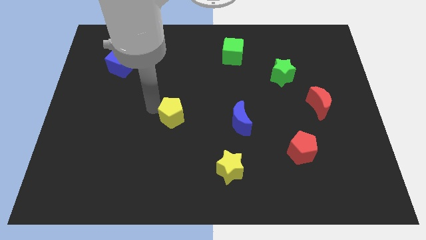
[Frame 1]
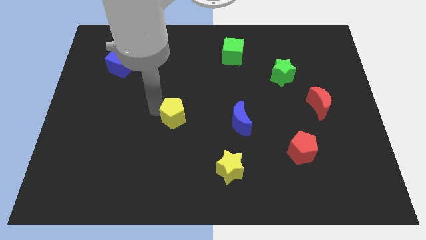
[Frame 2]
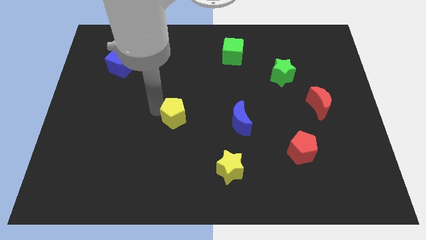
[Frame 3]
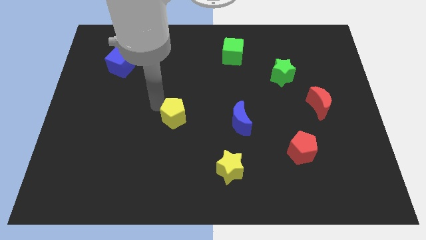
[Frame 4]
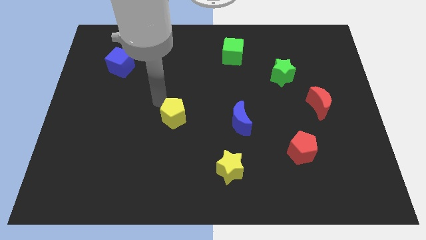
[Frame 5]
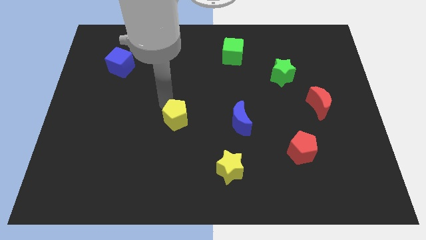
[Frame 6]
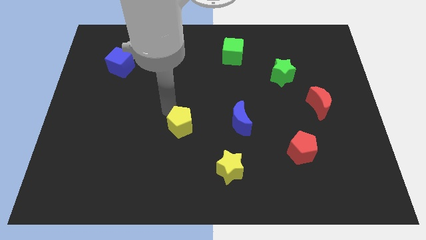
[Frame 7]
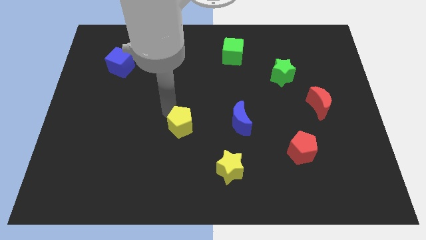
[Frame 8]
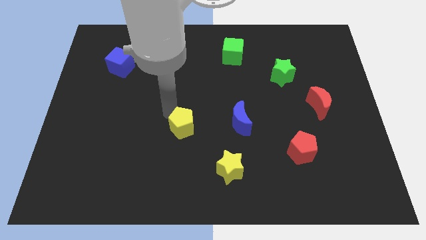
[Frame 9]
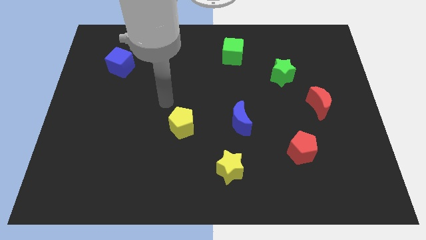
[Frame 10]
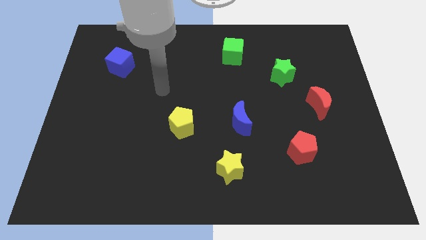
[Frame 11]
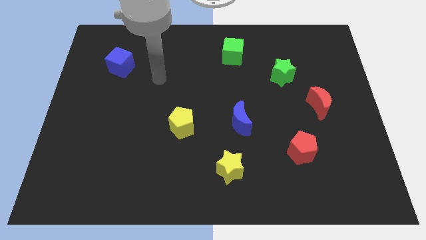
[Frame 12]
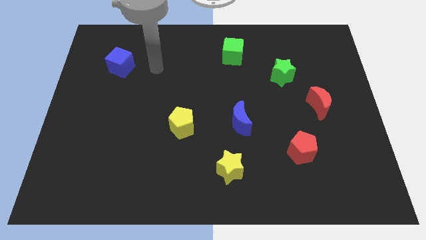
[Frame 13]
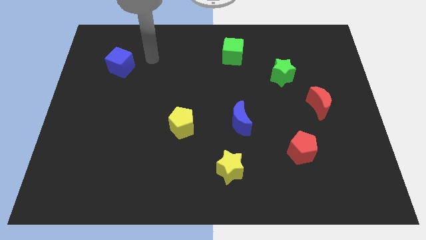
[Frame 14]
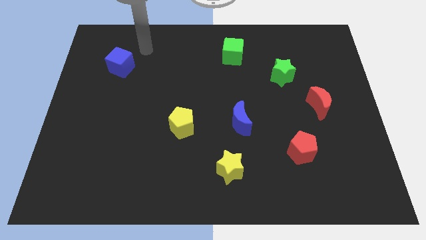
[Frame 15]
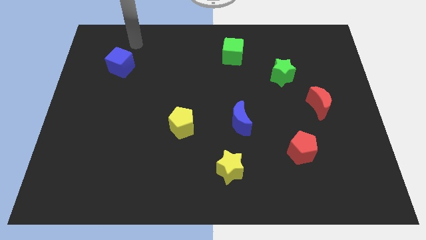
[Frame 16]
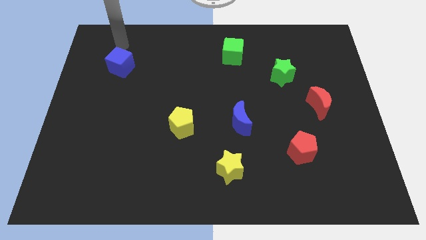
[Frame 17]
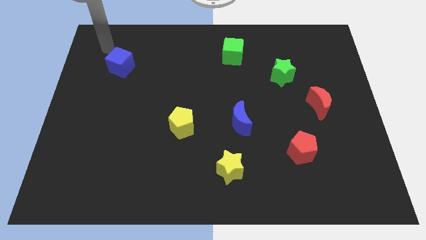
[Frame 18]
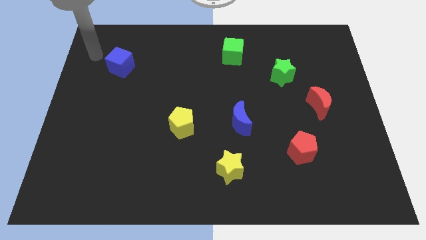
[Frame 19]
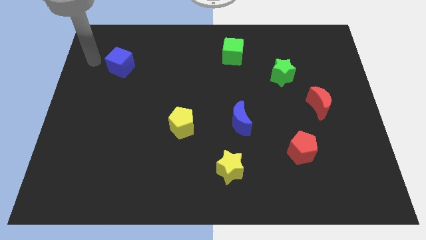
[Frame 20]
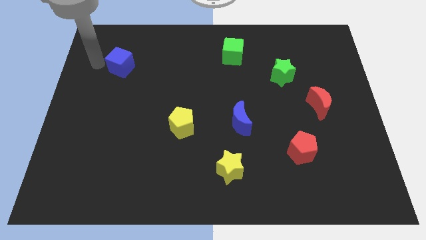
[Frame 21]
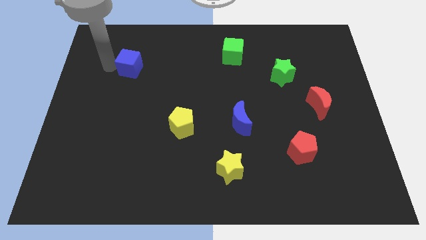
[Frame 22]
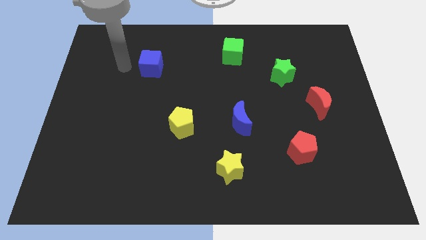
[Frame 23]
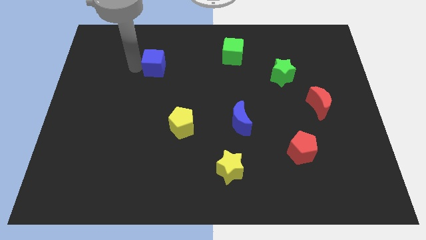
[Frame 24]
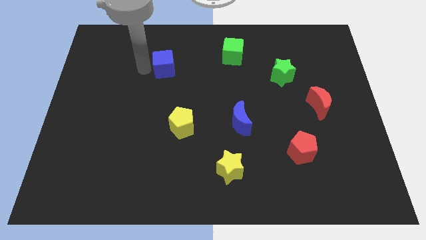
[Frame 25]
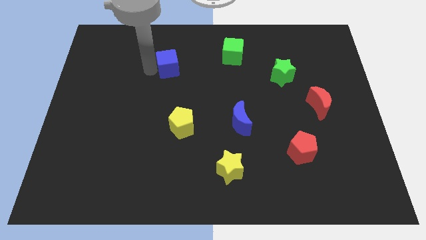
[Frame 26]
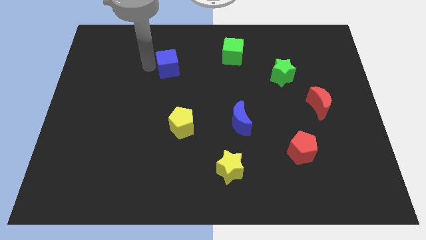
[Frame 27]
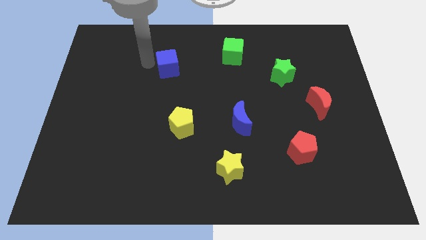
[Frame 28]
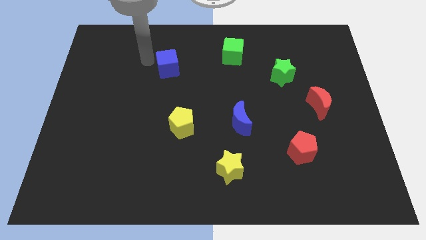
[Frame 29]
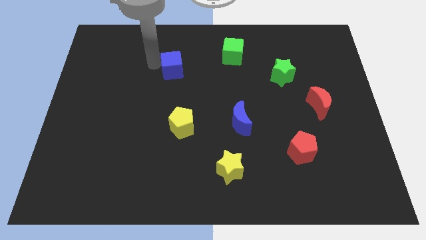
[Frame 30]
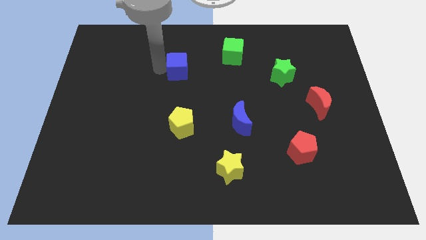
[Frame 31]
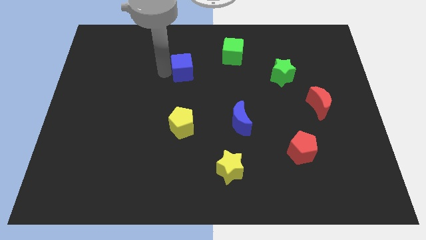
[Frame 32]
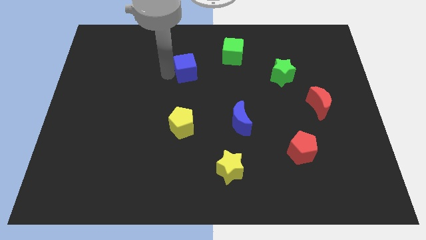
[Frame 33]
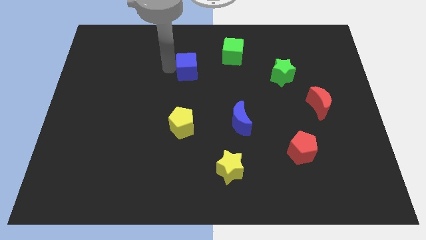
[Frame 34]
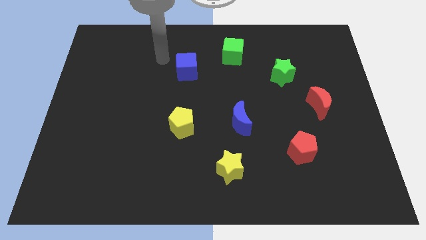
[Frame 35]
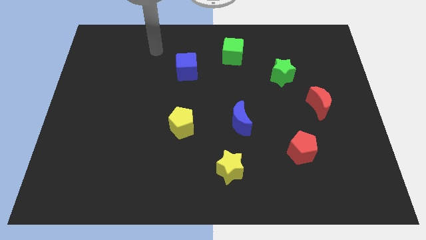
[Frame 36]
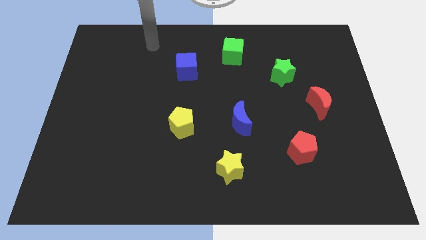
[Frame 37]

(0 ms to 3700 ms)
place the blue cube above the yellow pentagon

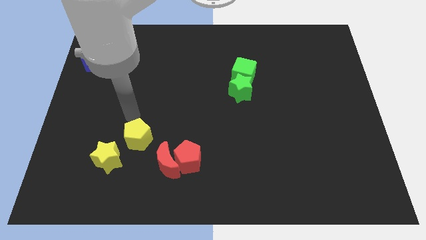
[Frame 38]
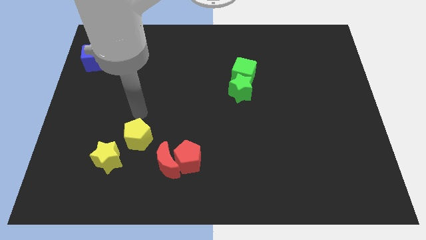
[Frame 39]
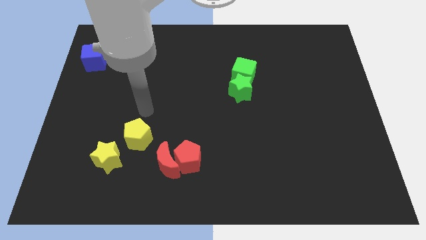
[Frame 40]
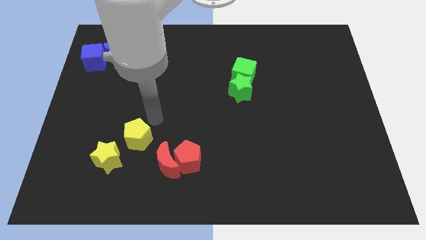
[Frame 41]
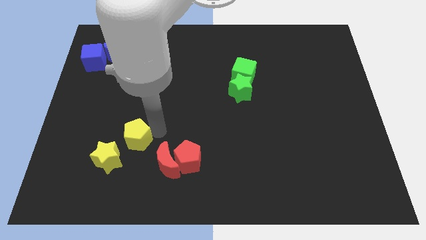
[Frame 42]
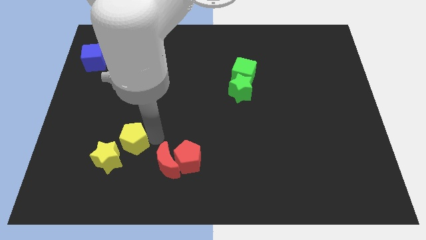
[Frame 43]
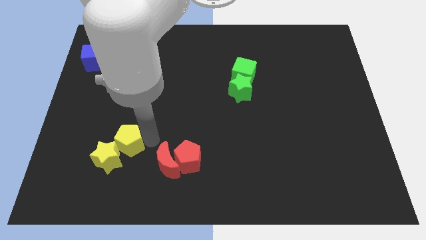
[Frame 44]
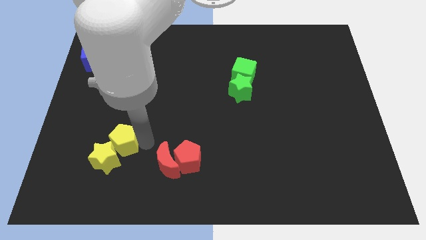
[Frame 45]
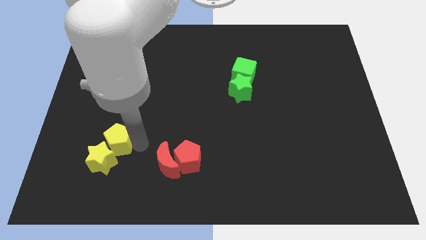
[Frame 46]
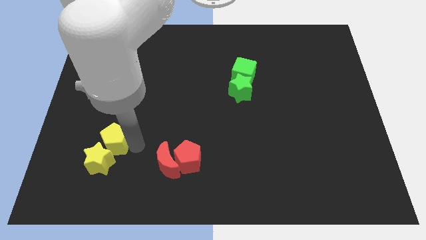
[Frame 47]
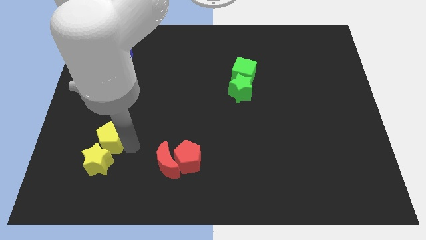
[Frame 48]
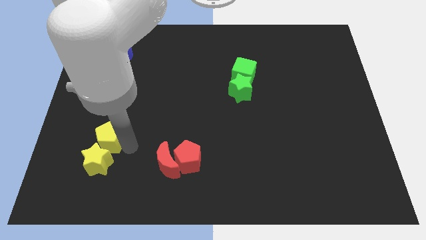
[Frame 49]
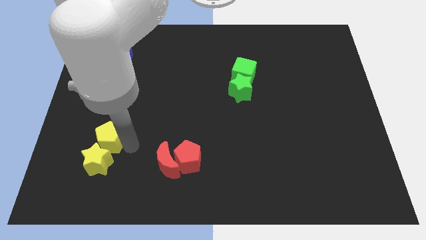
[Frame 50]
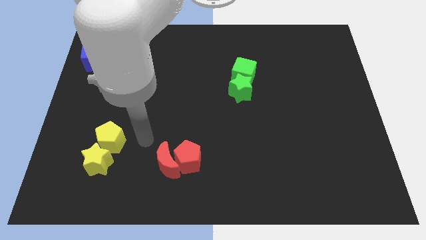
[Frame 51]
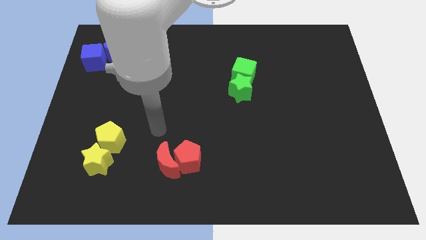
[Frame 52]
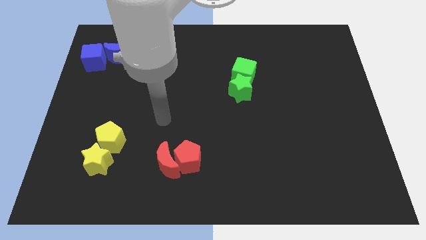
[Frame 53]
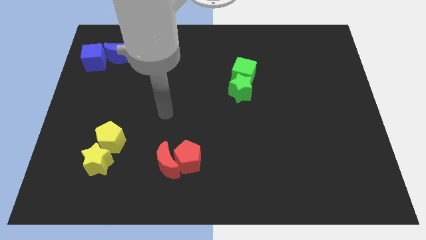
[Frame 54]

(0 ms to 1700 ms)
push the yellow pentagon into the yellow star

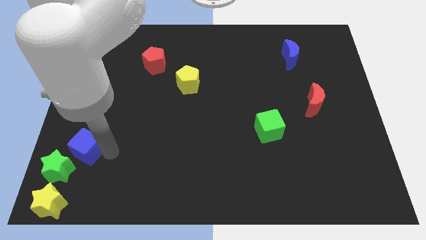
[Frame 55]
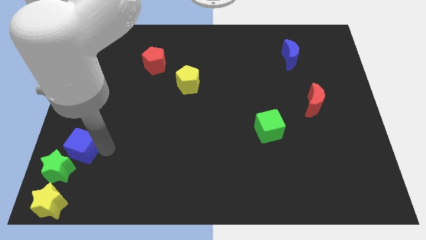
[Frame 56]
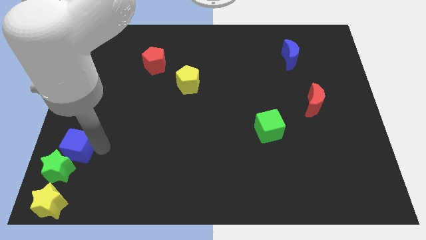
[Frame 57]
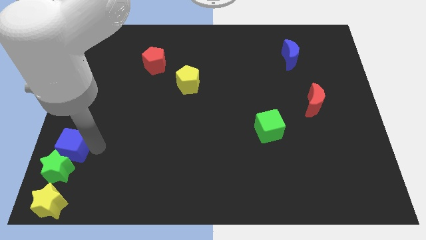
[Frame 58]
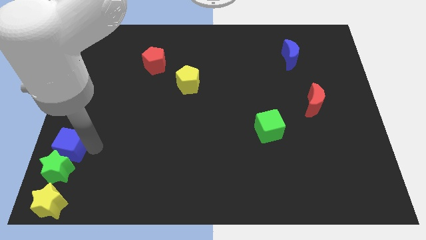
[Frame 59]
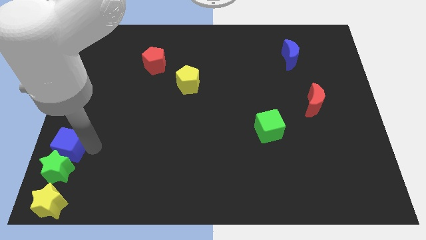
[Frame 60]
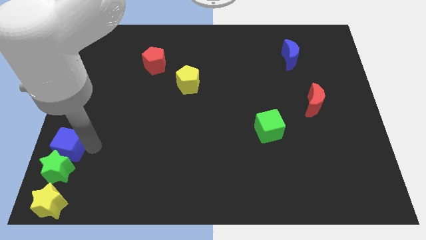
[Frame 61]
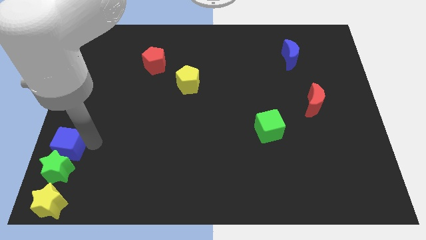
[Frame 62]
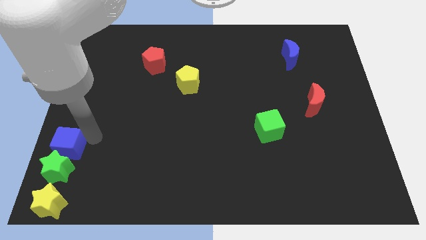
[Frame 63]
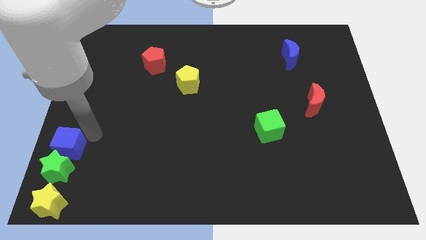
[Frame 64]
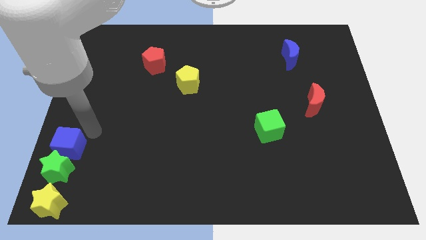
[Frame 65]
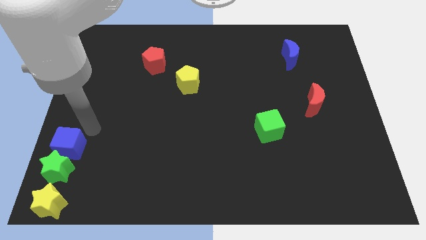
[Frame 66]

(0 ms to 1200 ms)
slide blue cube on top of green star

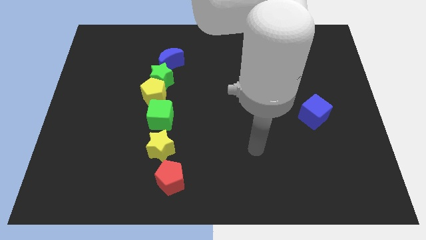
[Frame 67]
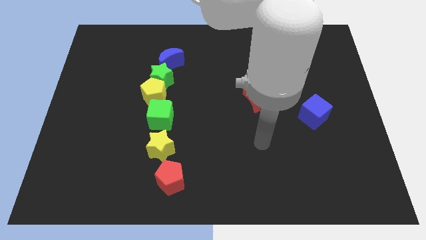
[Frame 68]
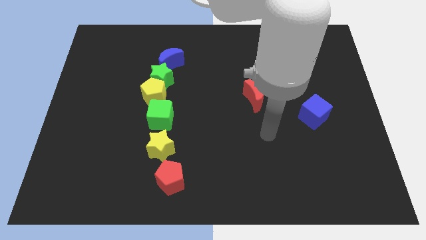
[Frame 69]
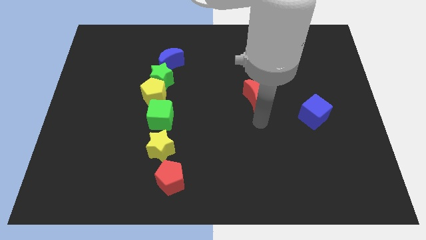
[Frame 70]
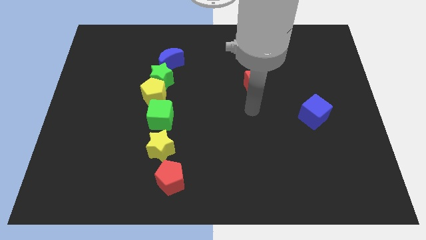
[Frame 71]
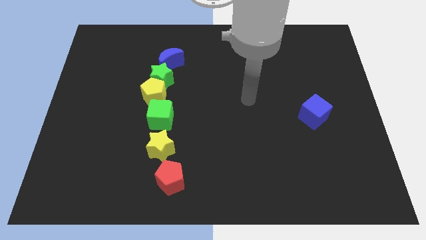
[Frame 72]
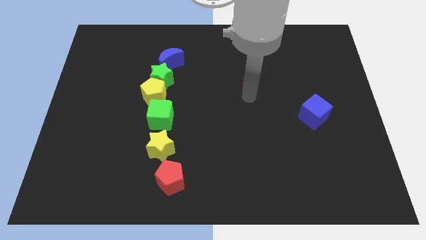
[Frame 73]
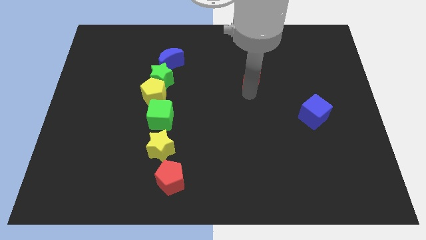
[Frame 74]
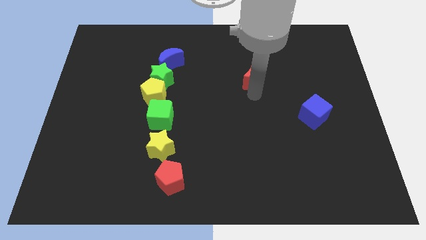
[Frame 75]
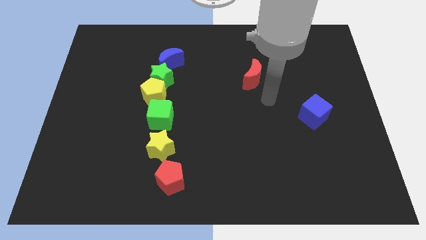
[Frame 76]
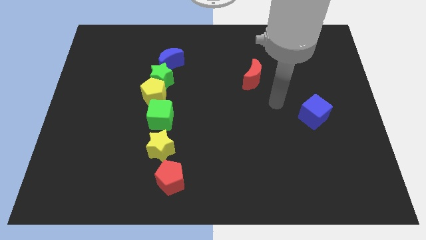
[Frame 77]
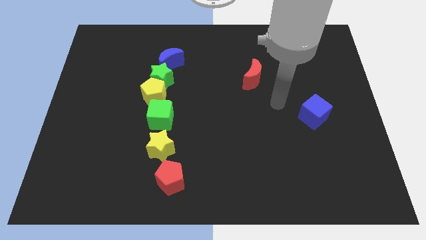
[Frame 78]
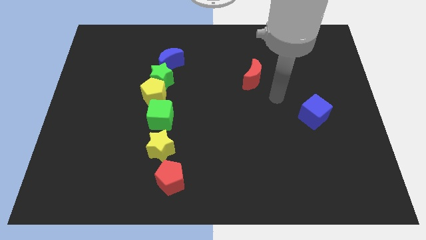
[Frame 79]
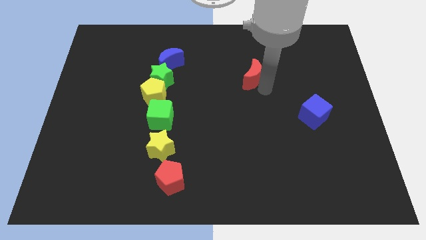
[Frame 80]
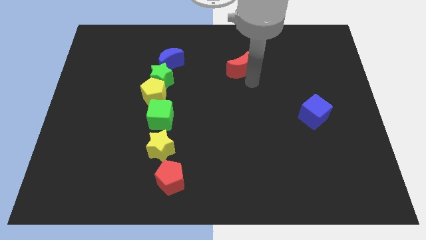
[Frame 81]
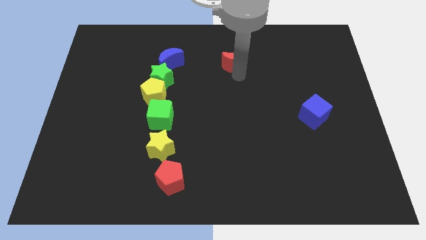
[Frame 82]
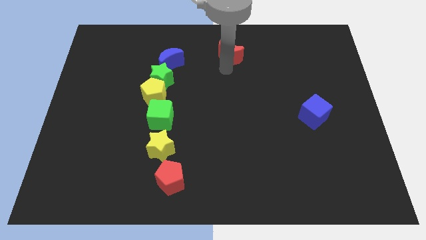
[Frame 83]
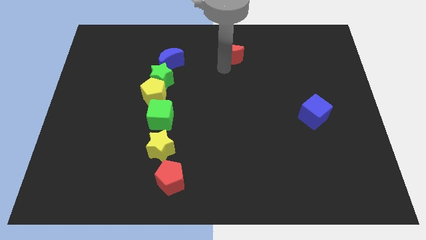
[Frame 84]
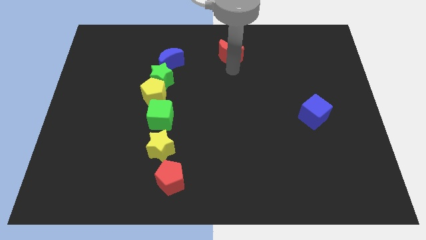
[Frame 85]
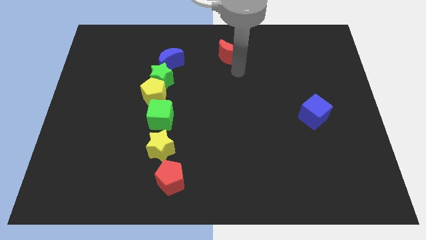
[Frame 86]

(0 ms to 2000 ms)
move the red moon towards the top center

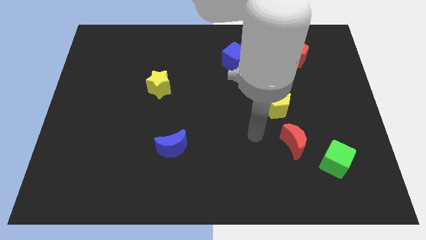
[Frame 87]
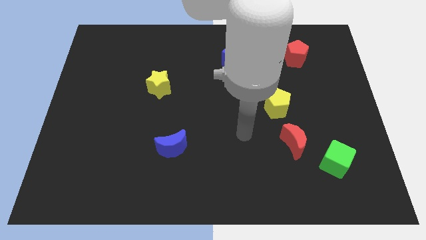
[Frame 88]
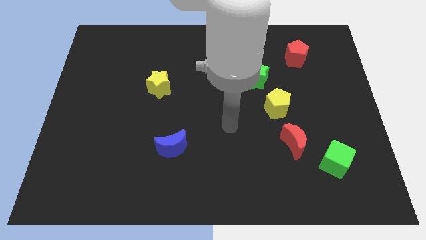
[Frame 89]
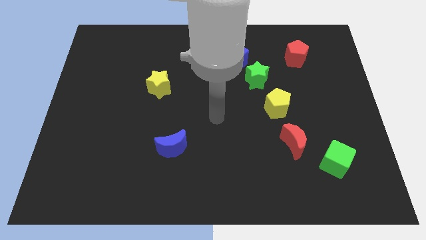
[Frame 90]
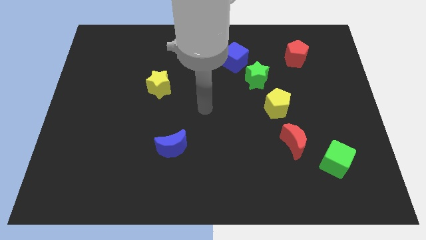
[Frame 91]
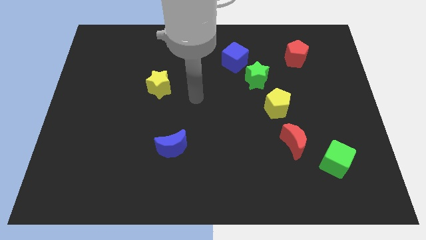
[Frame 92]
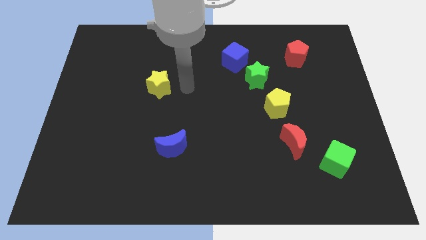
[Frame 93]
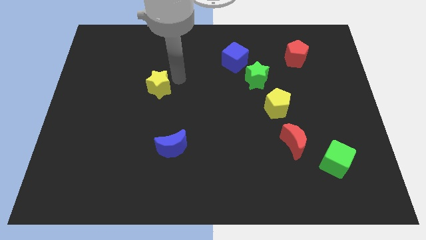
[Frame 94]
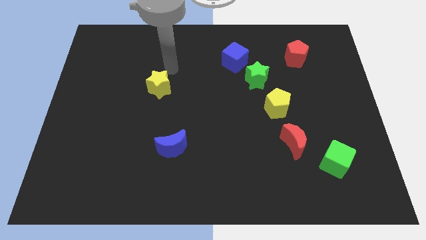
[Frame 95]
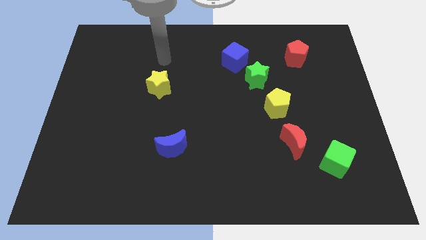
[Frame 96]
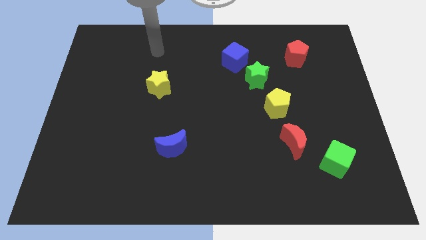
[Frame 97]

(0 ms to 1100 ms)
place your arm above the yellow star
